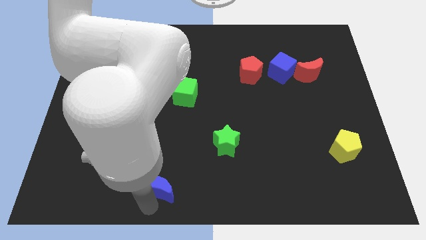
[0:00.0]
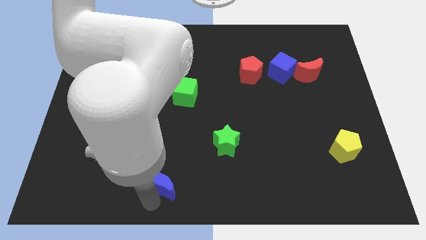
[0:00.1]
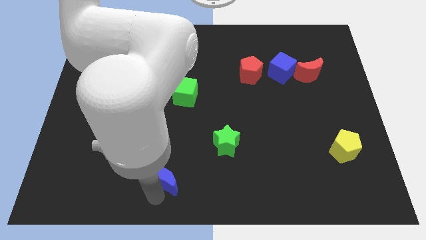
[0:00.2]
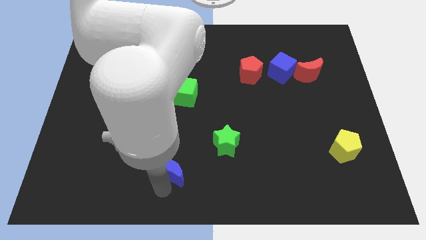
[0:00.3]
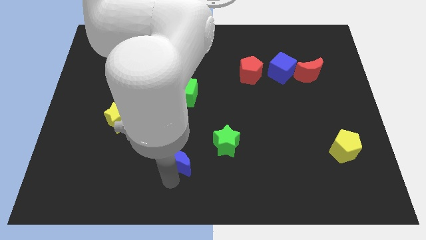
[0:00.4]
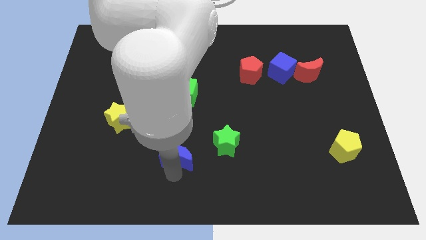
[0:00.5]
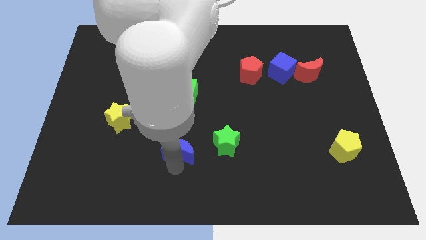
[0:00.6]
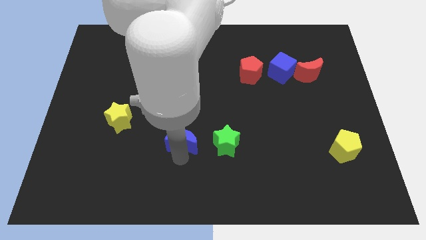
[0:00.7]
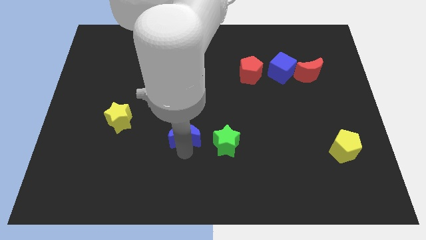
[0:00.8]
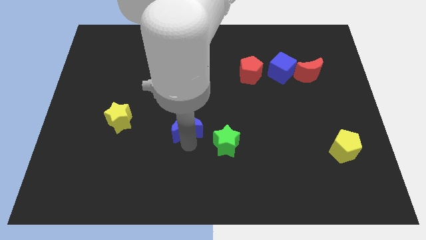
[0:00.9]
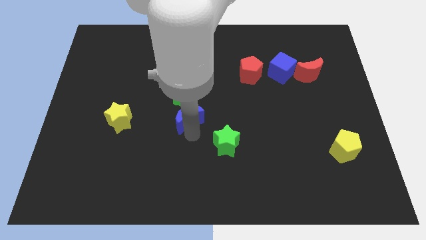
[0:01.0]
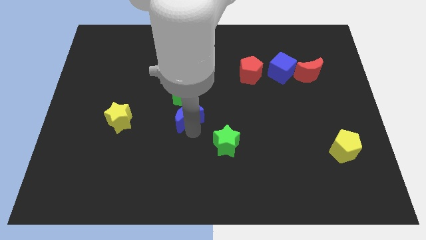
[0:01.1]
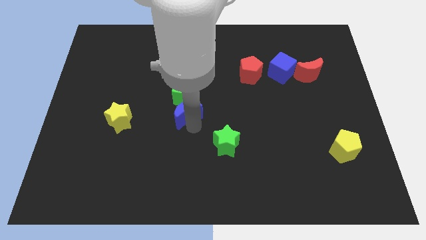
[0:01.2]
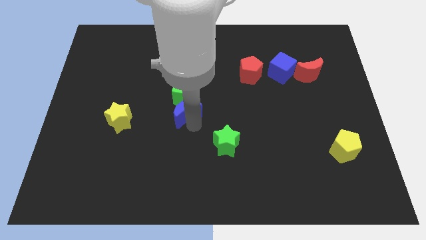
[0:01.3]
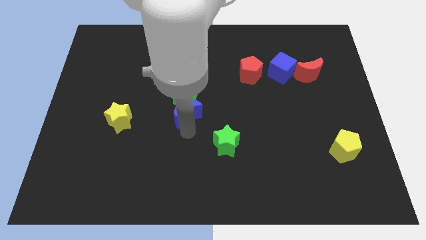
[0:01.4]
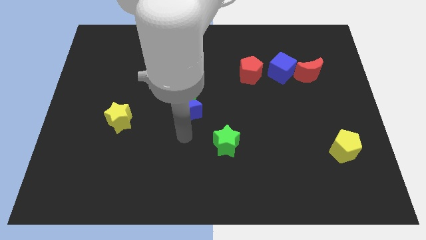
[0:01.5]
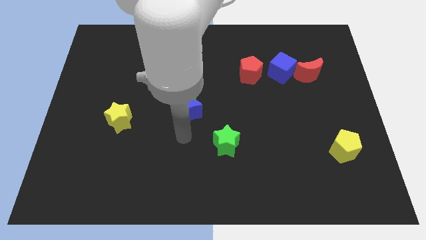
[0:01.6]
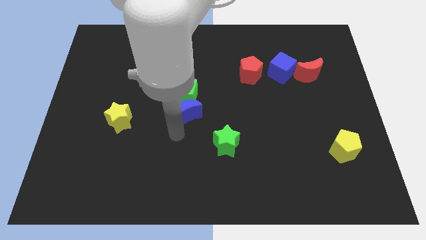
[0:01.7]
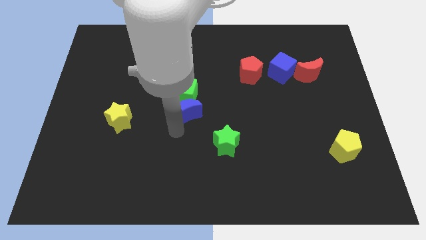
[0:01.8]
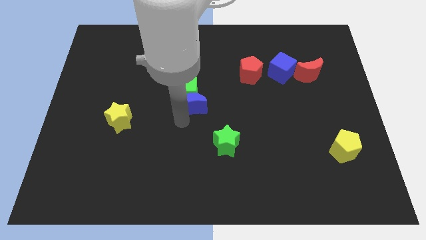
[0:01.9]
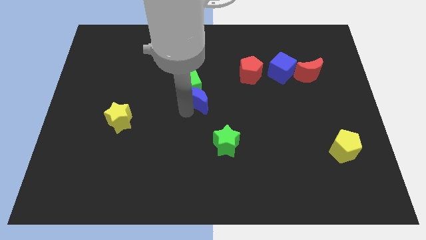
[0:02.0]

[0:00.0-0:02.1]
place the blue crescent below the green cube

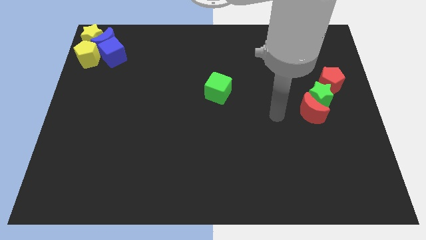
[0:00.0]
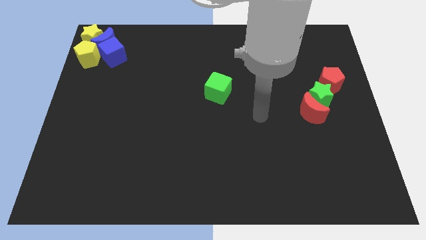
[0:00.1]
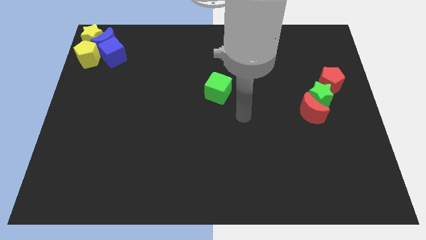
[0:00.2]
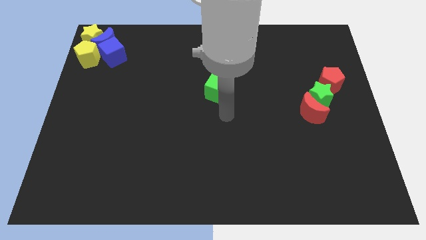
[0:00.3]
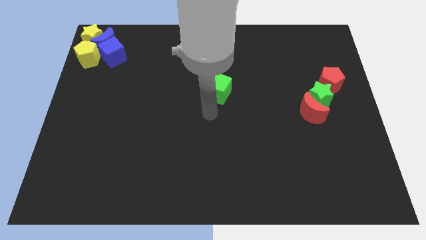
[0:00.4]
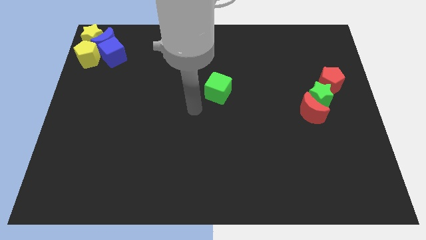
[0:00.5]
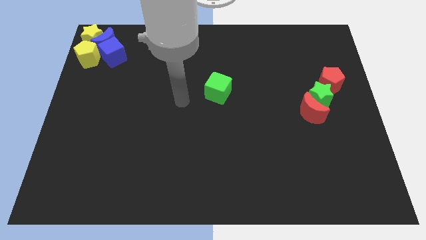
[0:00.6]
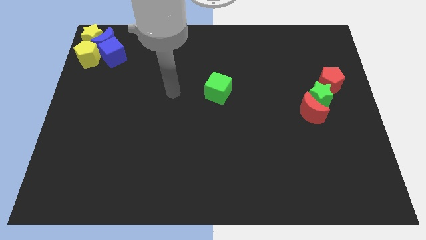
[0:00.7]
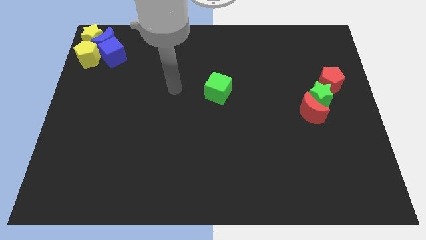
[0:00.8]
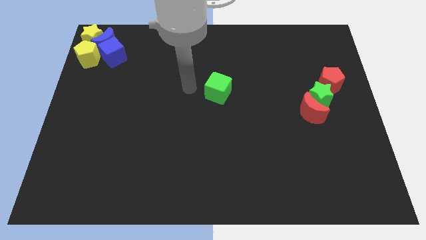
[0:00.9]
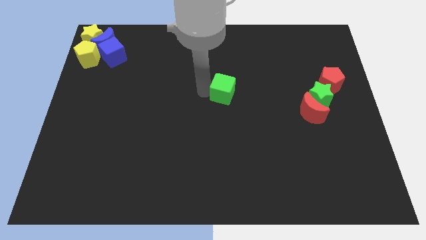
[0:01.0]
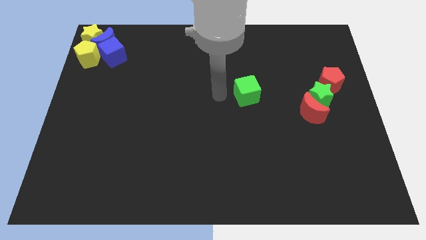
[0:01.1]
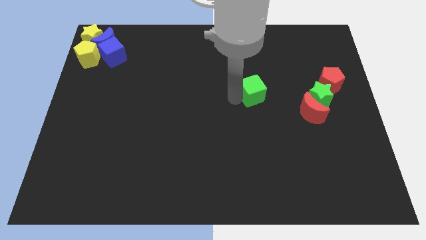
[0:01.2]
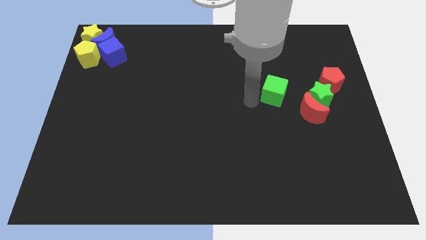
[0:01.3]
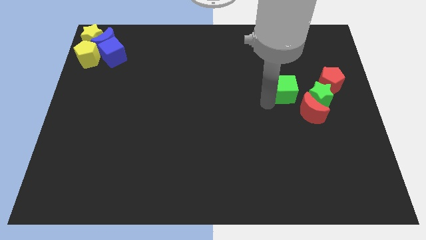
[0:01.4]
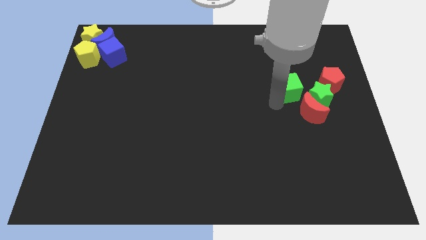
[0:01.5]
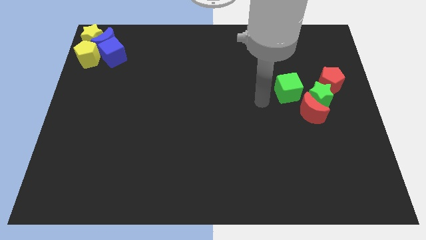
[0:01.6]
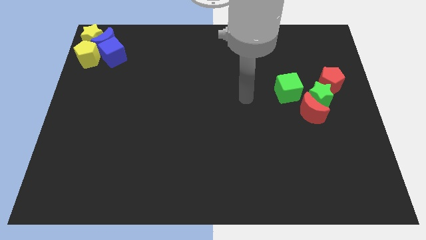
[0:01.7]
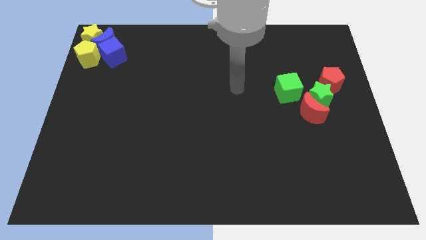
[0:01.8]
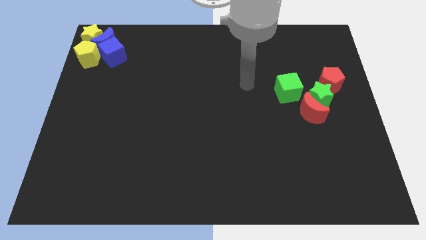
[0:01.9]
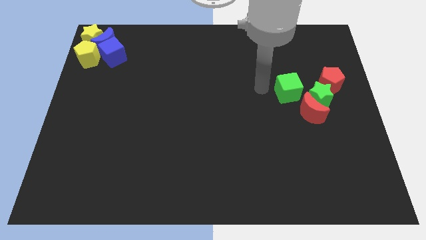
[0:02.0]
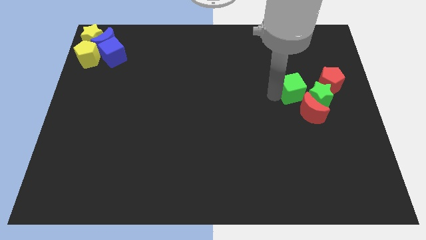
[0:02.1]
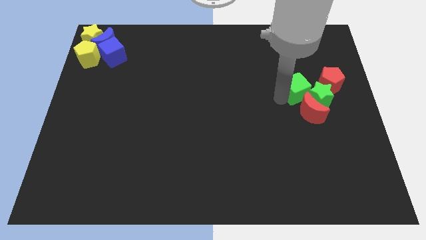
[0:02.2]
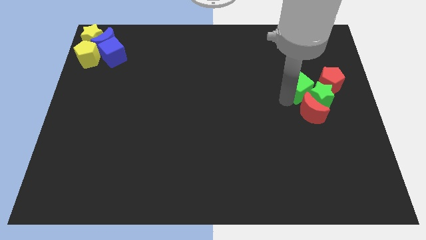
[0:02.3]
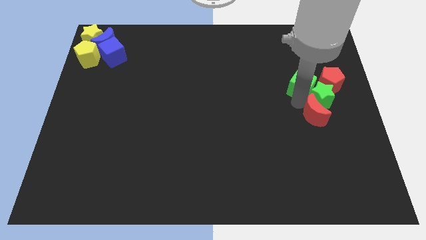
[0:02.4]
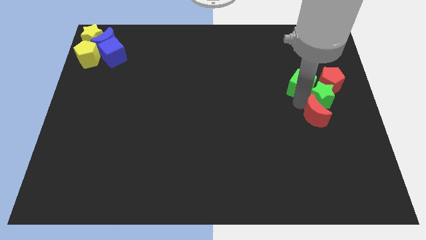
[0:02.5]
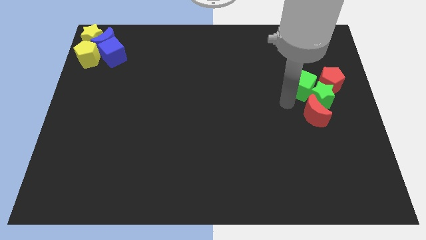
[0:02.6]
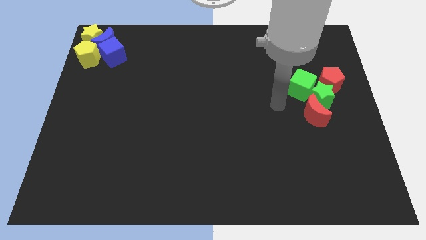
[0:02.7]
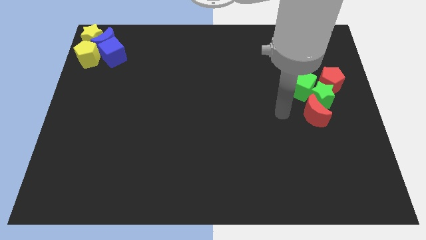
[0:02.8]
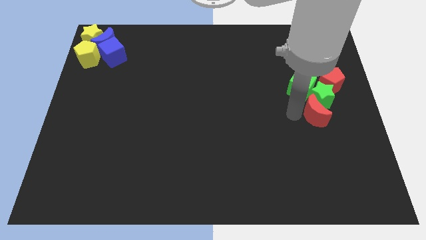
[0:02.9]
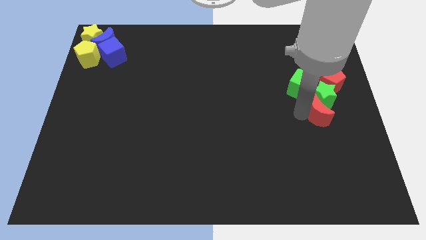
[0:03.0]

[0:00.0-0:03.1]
push the green cube into green star

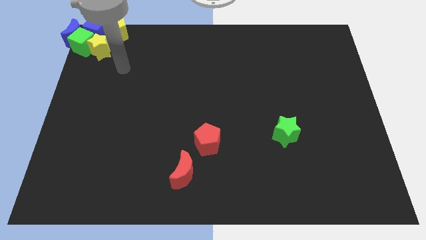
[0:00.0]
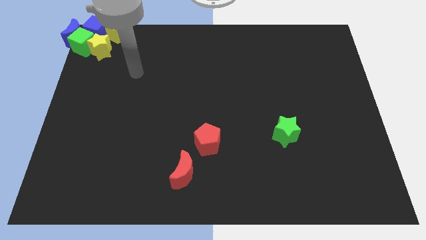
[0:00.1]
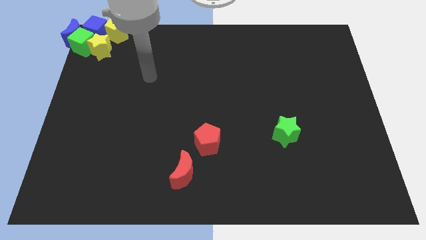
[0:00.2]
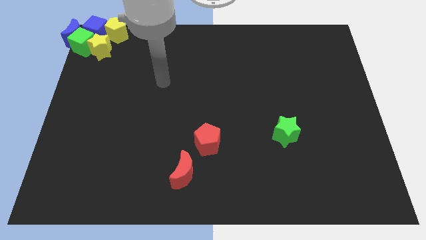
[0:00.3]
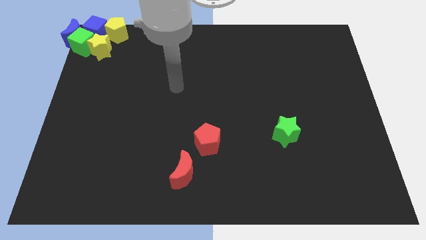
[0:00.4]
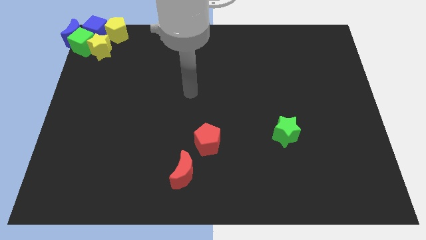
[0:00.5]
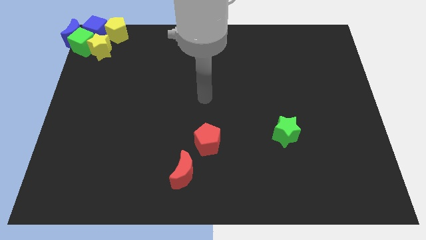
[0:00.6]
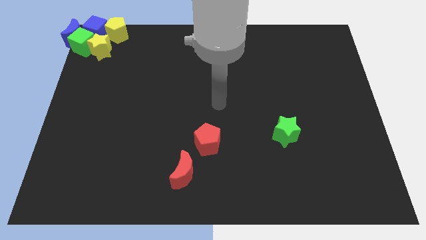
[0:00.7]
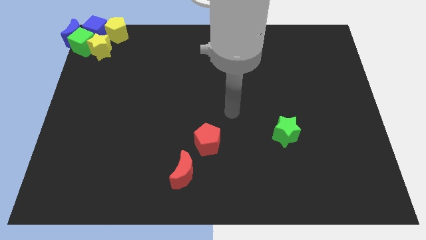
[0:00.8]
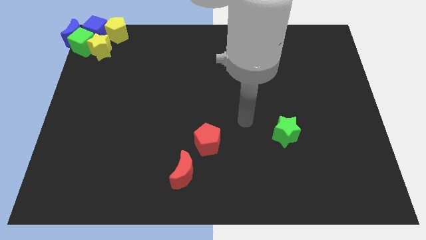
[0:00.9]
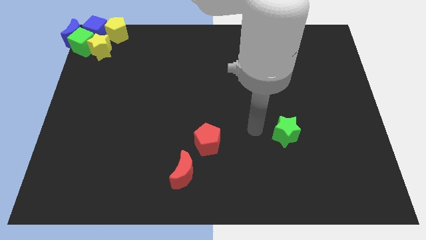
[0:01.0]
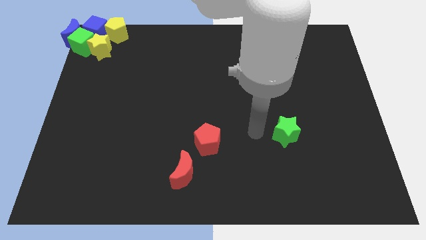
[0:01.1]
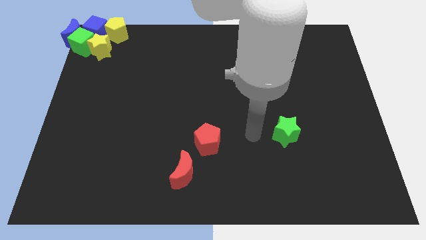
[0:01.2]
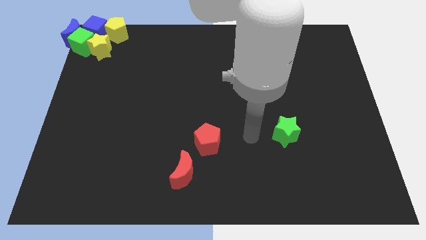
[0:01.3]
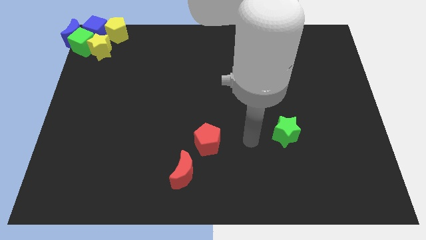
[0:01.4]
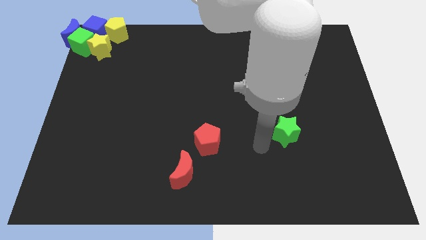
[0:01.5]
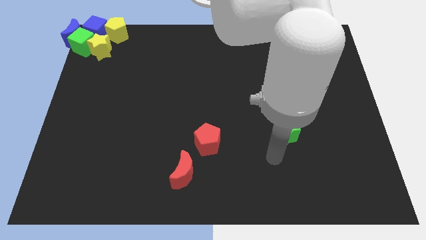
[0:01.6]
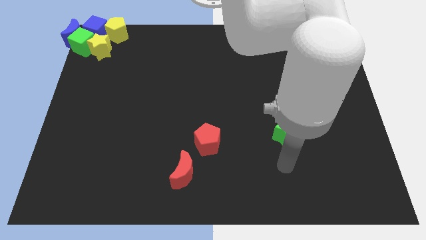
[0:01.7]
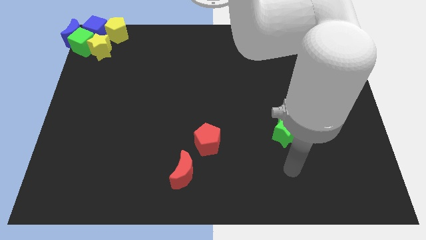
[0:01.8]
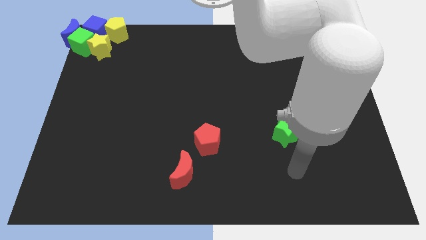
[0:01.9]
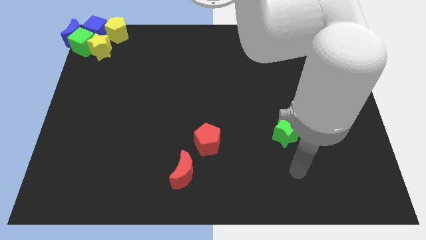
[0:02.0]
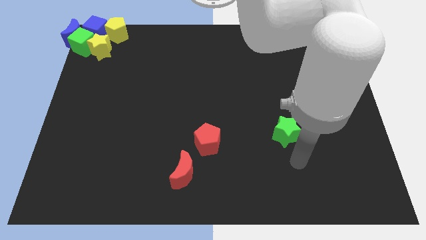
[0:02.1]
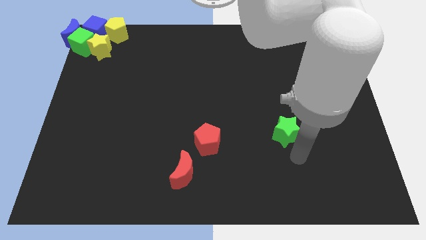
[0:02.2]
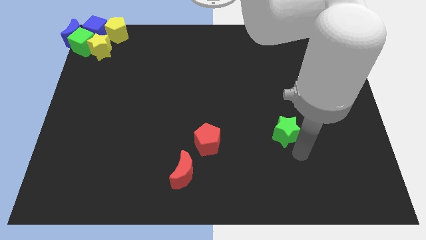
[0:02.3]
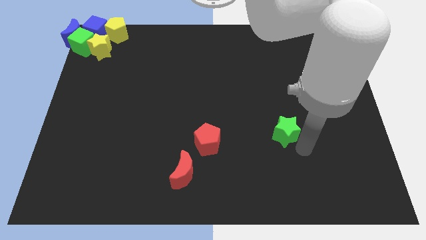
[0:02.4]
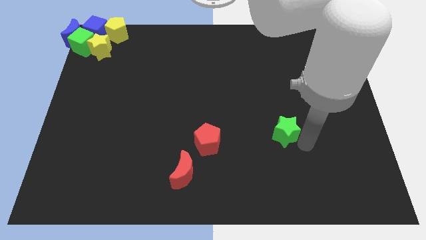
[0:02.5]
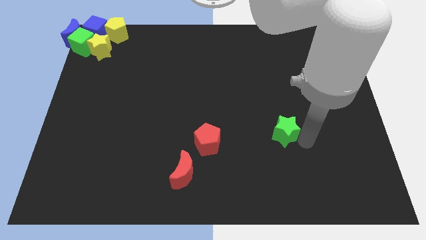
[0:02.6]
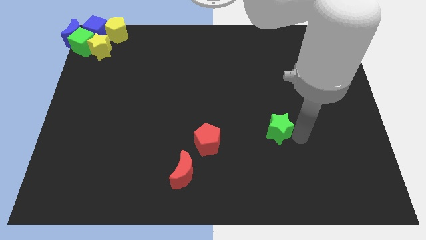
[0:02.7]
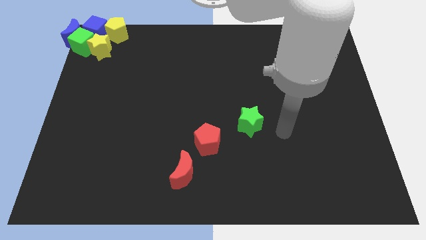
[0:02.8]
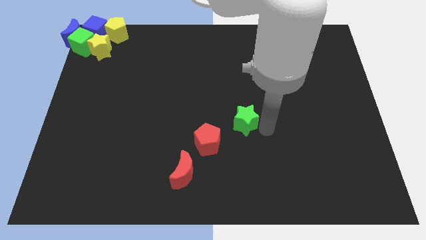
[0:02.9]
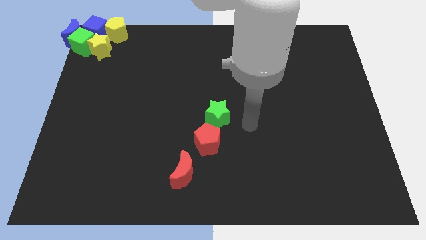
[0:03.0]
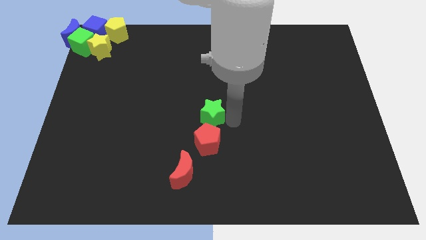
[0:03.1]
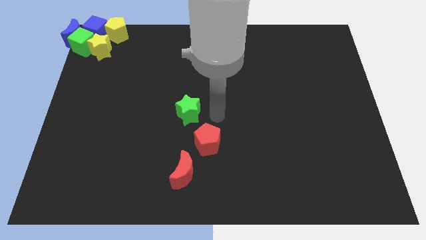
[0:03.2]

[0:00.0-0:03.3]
place the green star at the top of red pentagon

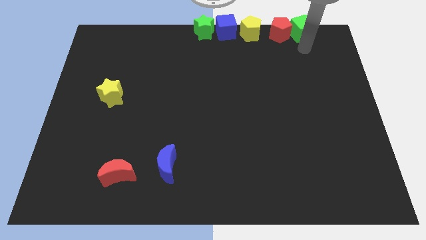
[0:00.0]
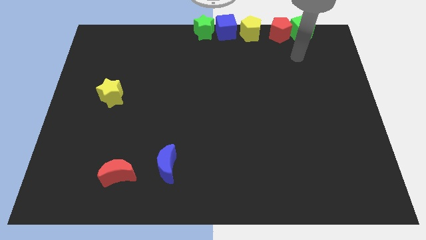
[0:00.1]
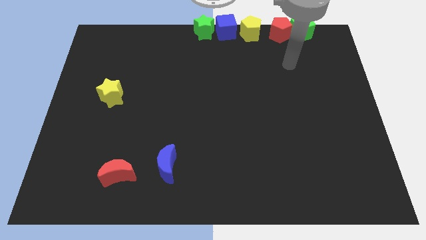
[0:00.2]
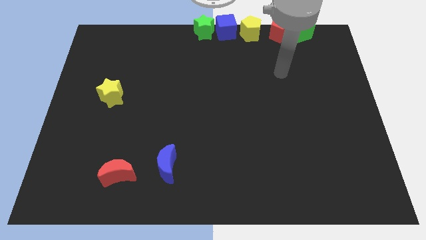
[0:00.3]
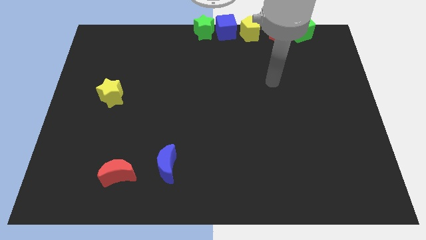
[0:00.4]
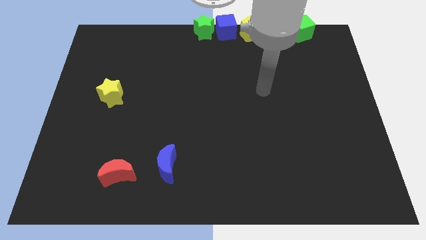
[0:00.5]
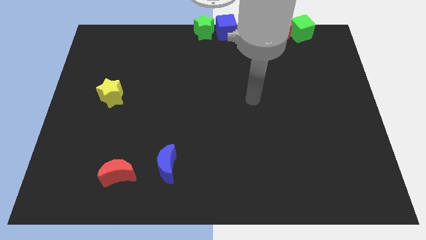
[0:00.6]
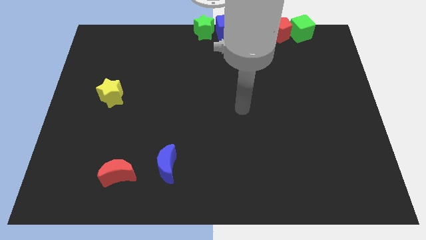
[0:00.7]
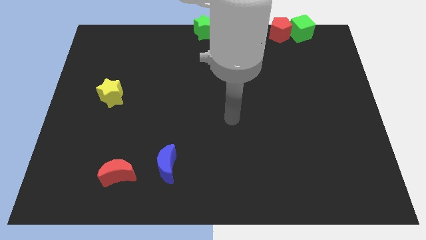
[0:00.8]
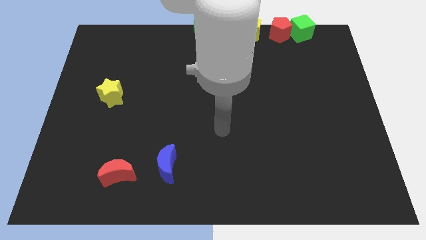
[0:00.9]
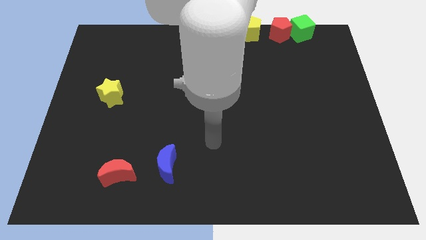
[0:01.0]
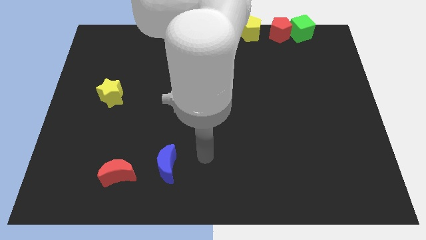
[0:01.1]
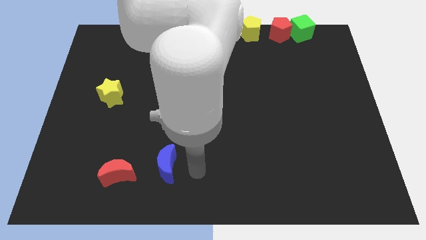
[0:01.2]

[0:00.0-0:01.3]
move your arm away from the green cube
